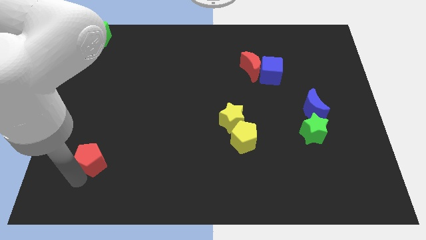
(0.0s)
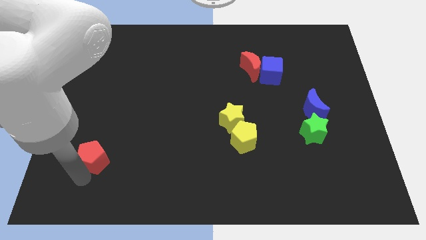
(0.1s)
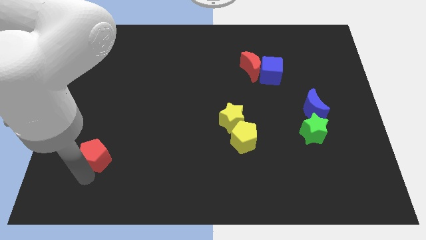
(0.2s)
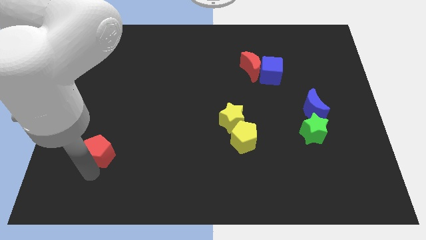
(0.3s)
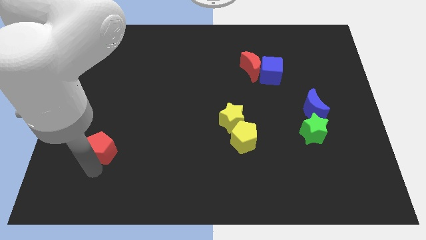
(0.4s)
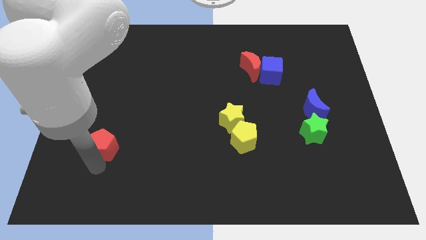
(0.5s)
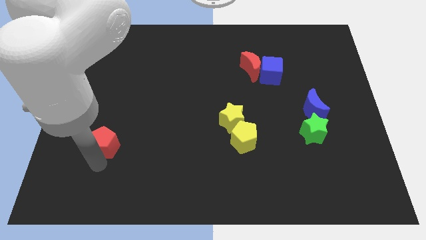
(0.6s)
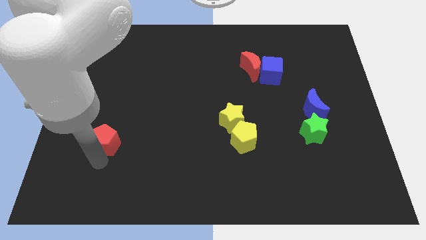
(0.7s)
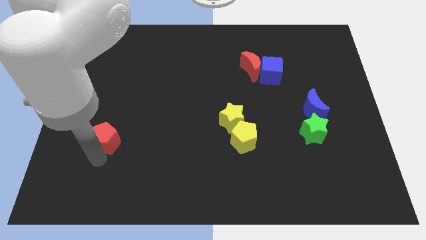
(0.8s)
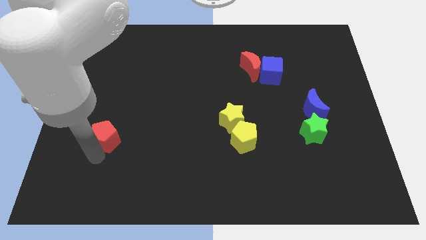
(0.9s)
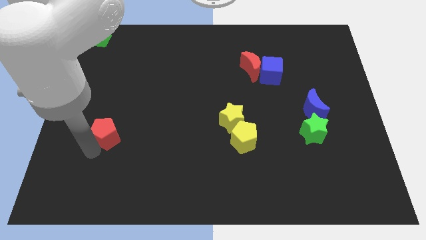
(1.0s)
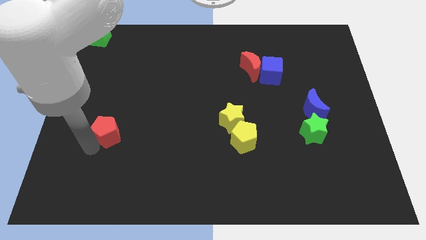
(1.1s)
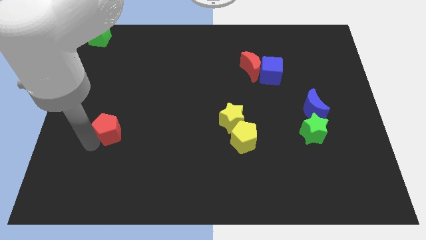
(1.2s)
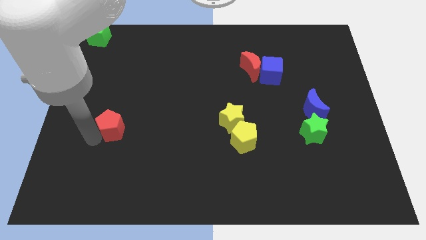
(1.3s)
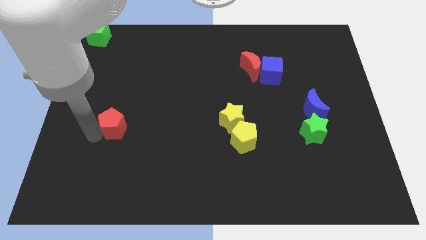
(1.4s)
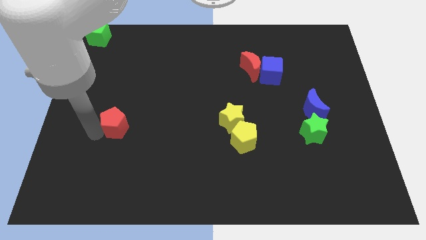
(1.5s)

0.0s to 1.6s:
move red pentagon upwards

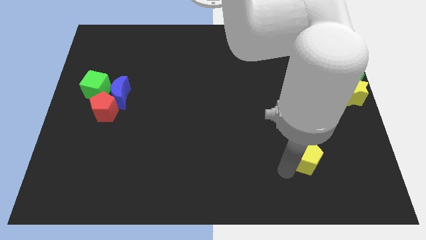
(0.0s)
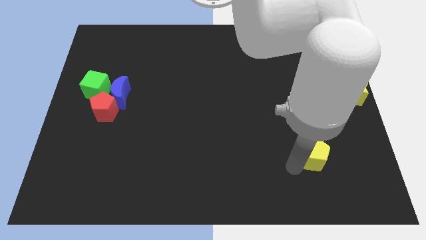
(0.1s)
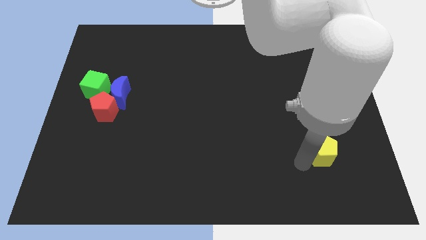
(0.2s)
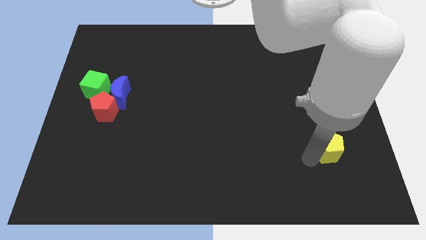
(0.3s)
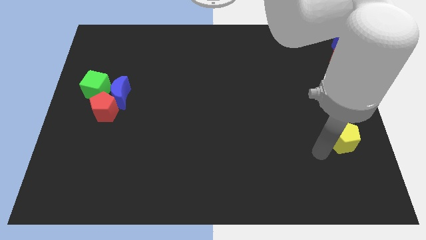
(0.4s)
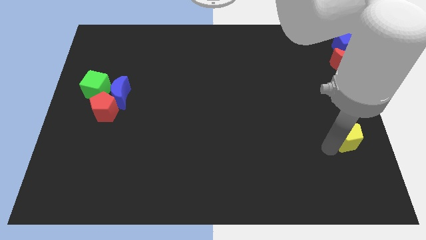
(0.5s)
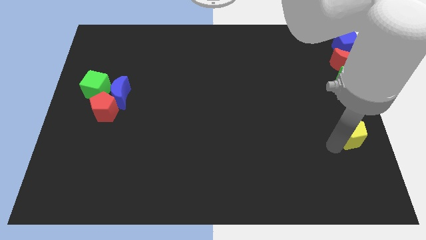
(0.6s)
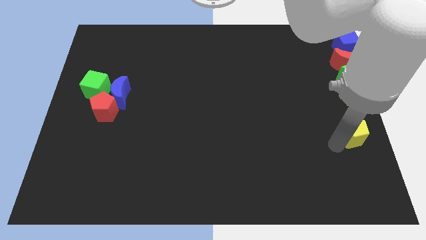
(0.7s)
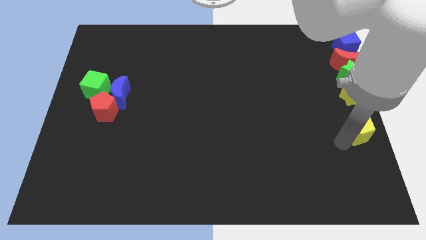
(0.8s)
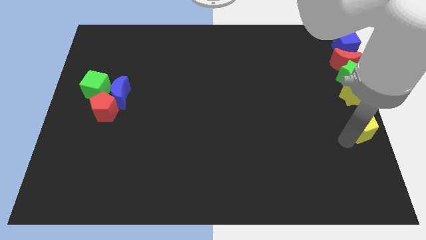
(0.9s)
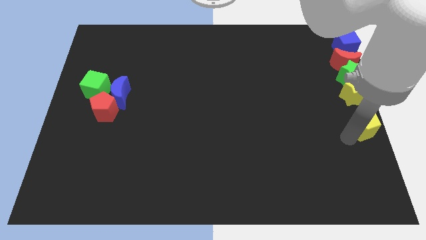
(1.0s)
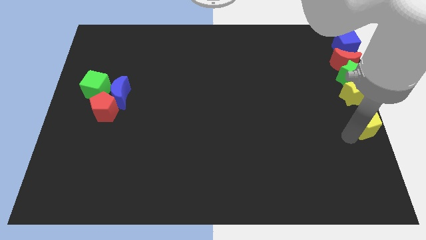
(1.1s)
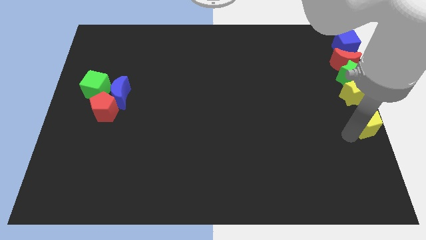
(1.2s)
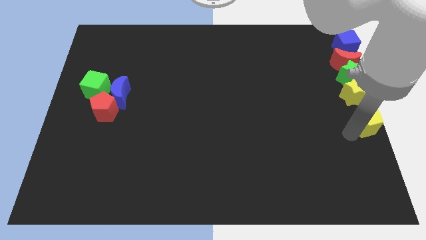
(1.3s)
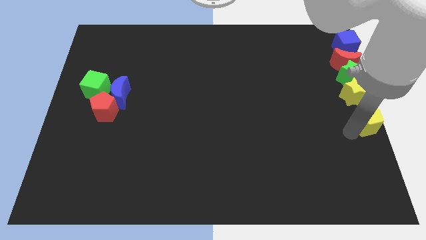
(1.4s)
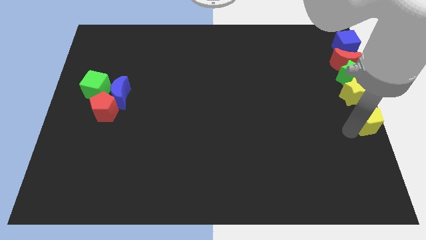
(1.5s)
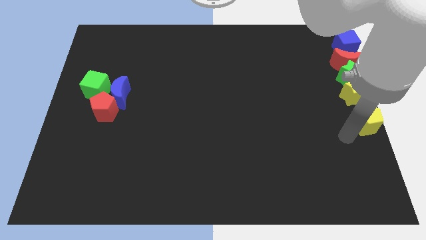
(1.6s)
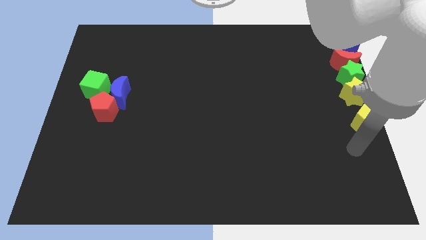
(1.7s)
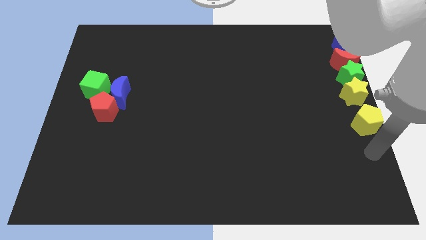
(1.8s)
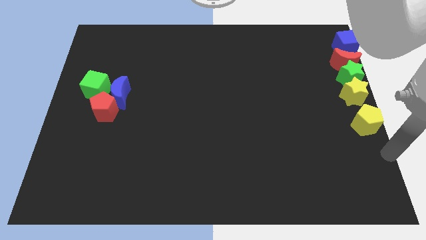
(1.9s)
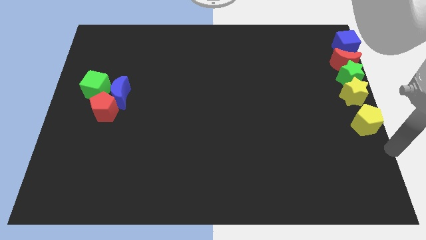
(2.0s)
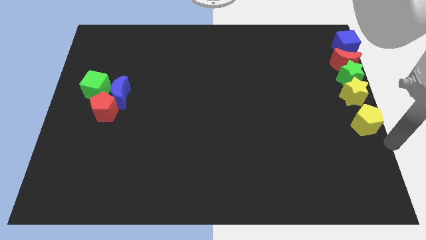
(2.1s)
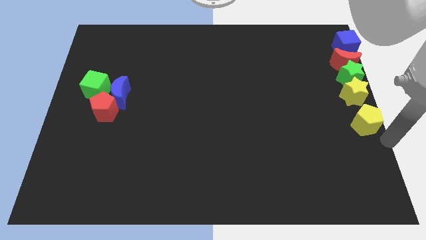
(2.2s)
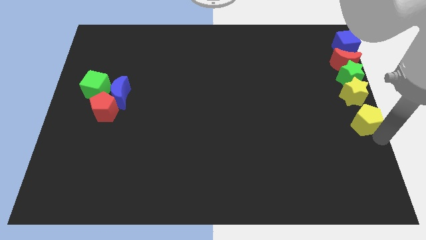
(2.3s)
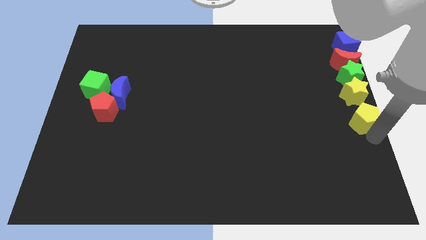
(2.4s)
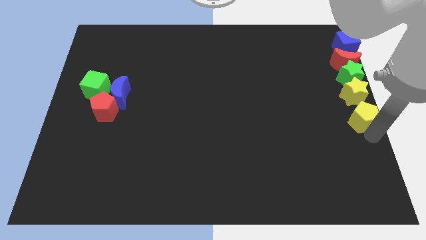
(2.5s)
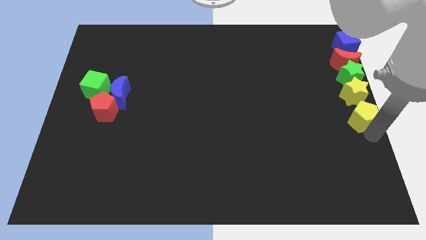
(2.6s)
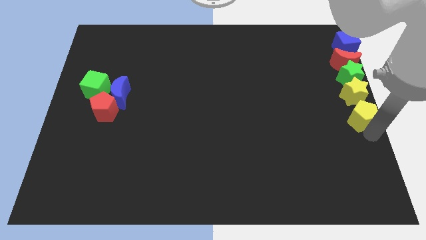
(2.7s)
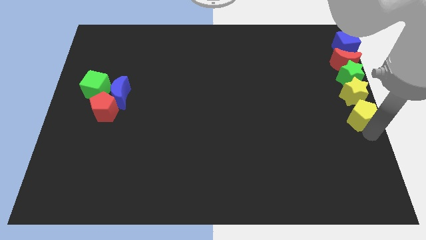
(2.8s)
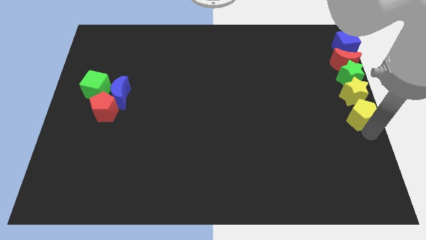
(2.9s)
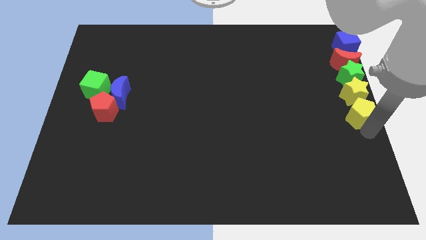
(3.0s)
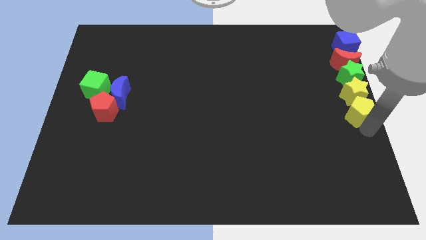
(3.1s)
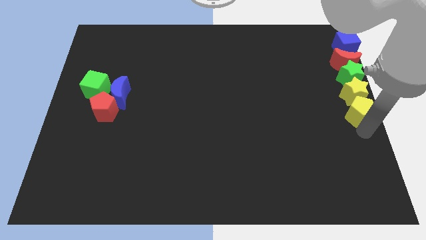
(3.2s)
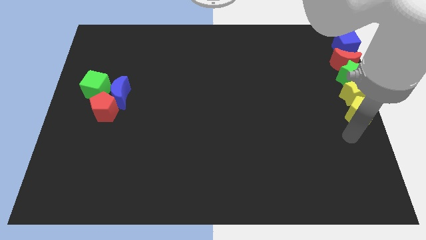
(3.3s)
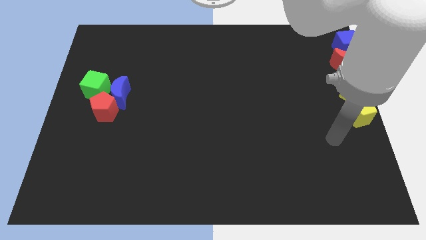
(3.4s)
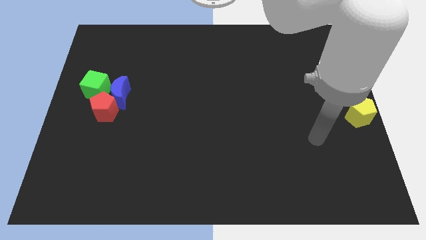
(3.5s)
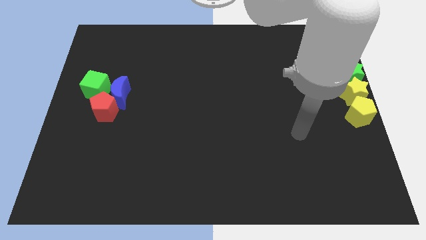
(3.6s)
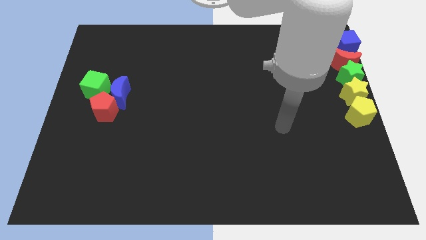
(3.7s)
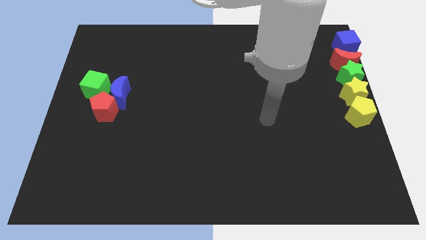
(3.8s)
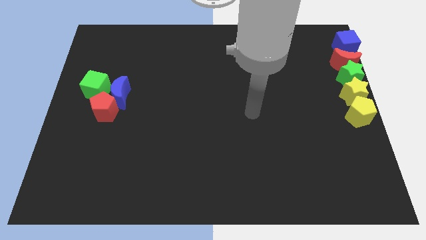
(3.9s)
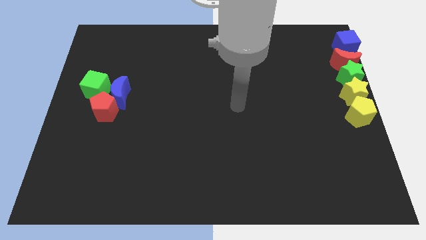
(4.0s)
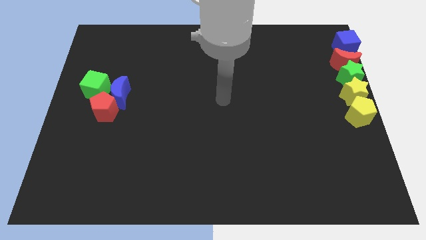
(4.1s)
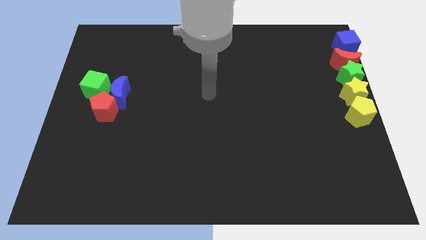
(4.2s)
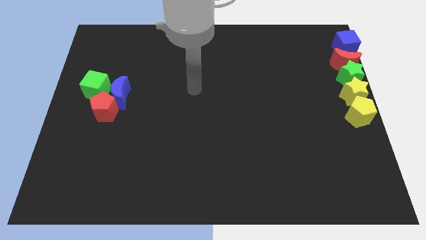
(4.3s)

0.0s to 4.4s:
push the yellow pentagon below to the yellow star

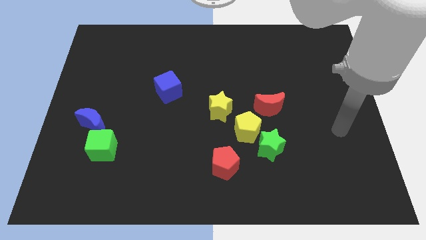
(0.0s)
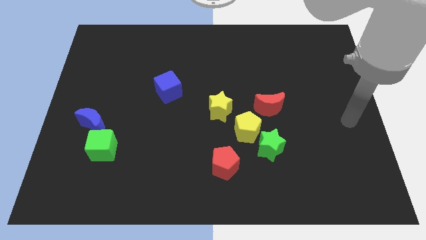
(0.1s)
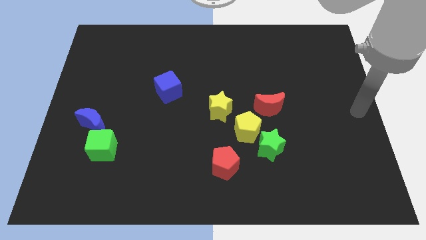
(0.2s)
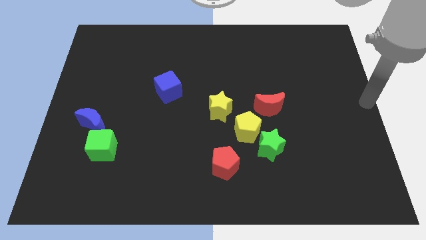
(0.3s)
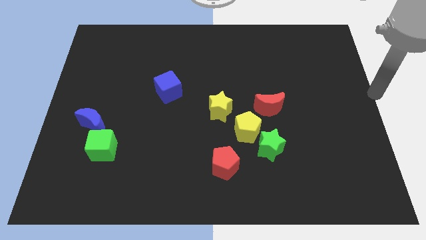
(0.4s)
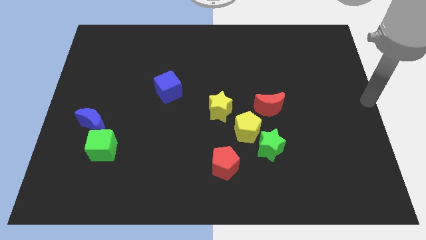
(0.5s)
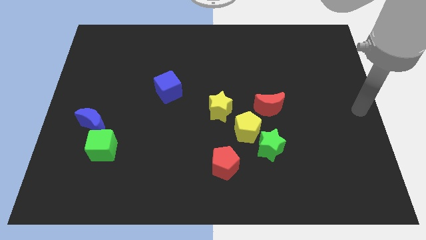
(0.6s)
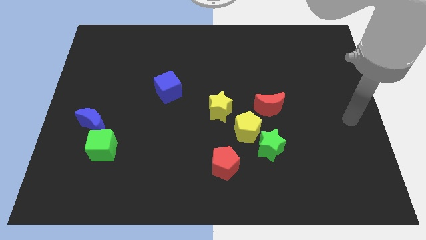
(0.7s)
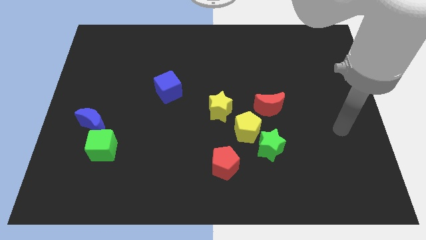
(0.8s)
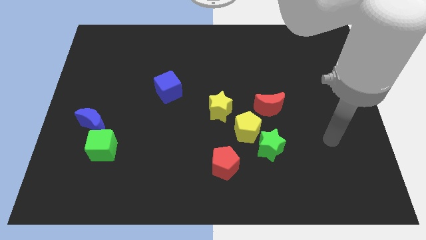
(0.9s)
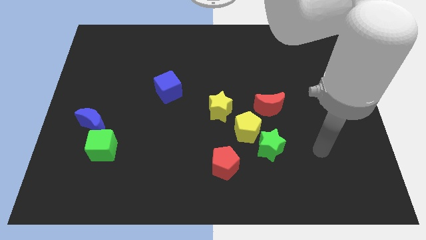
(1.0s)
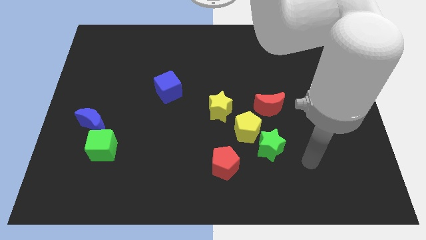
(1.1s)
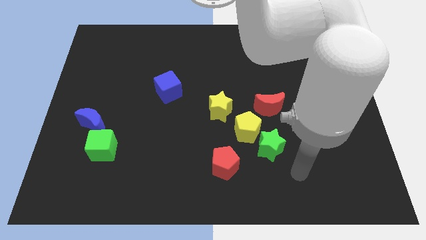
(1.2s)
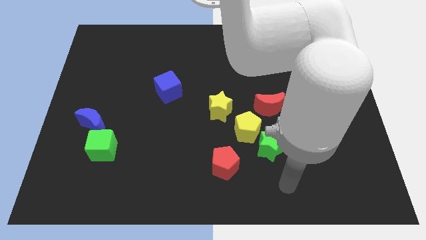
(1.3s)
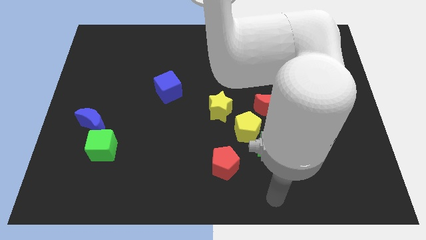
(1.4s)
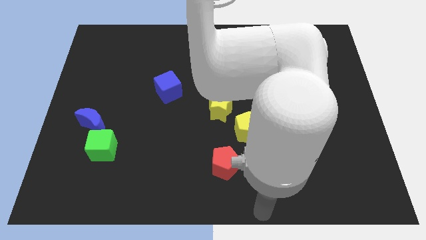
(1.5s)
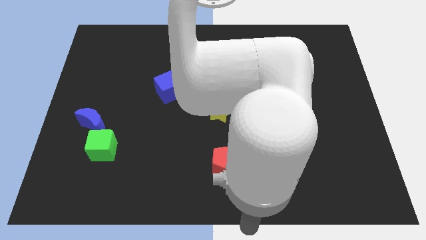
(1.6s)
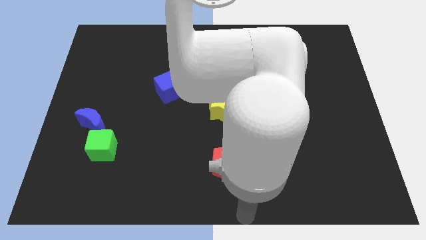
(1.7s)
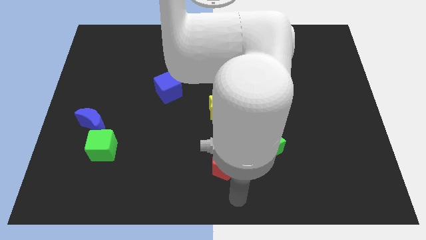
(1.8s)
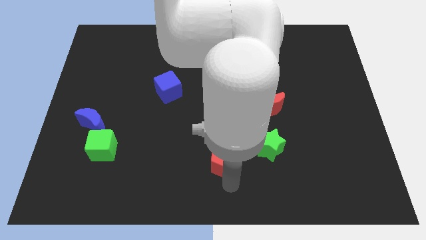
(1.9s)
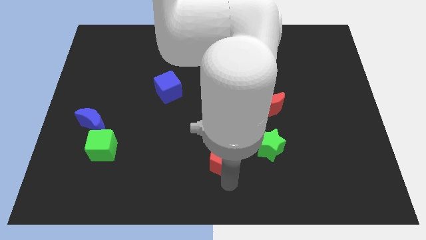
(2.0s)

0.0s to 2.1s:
move the arm towards the red pentagon

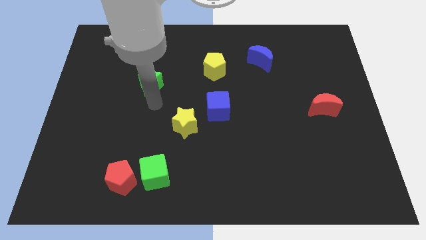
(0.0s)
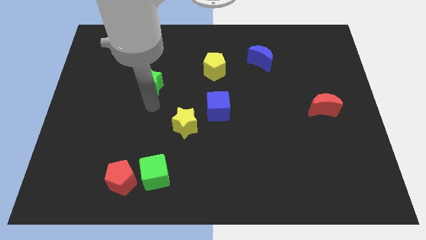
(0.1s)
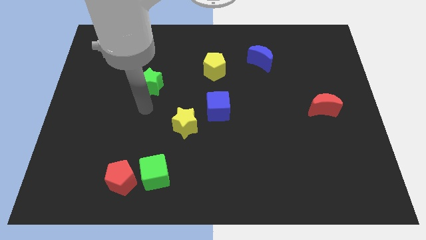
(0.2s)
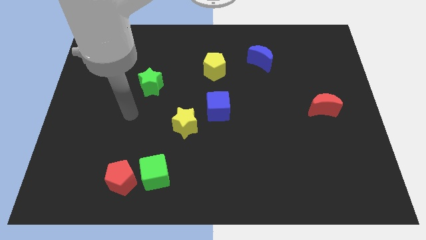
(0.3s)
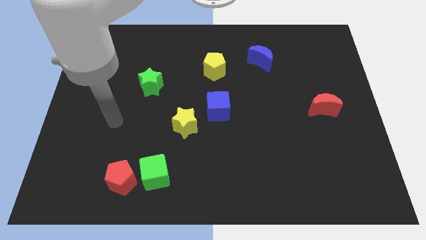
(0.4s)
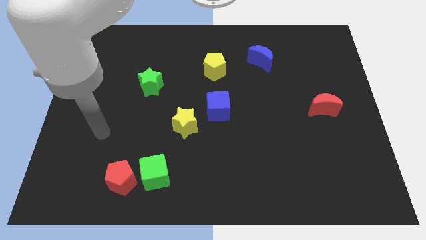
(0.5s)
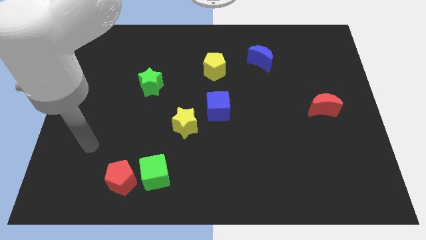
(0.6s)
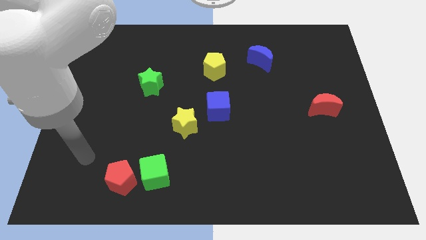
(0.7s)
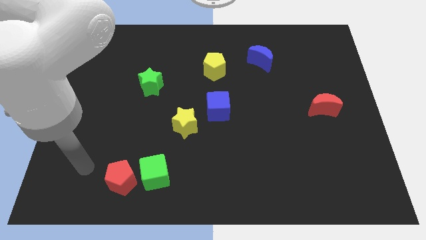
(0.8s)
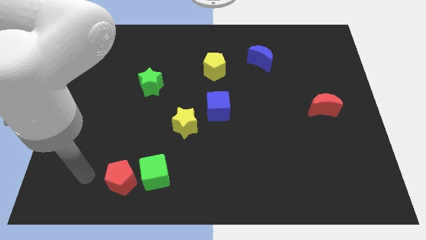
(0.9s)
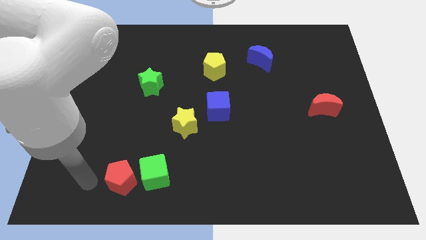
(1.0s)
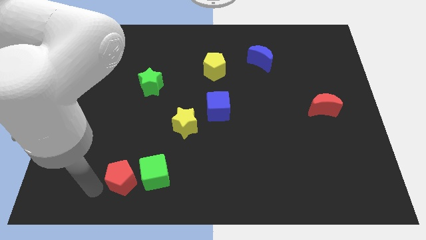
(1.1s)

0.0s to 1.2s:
point your arm at the left of the red pentagon
